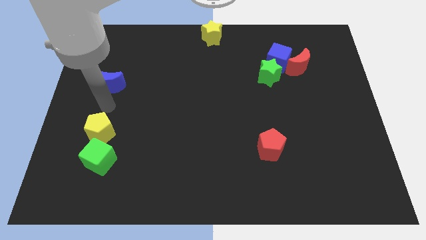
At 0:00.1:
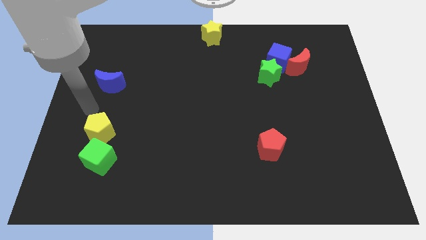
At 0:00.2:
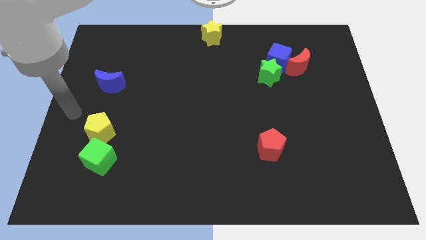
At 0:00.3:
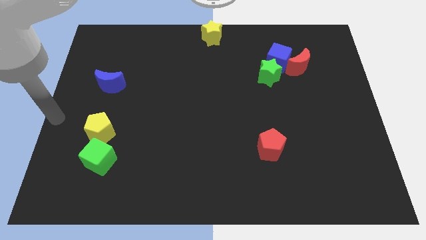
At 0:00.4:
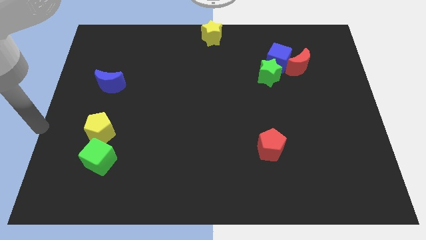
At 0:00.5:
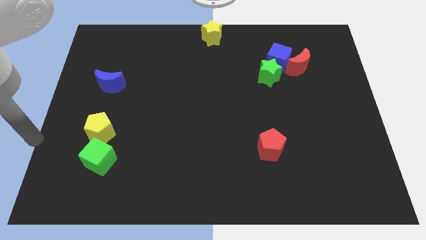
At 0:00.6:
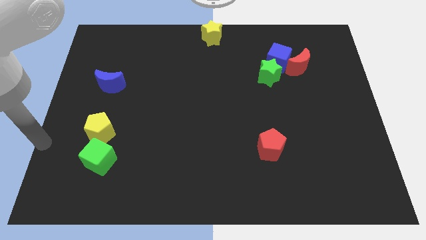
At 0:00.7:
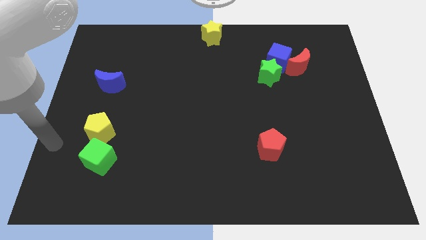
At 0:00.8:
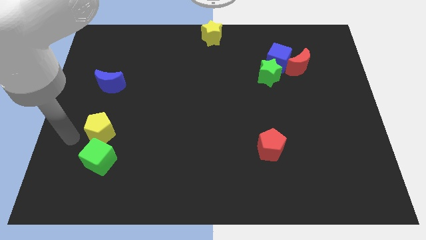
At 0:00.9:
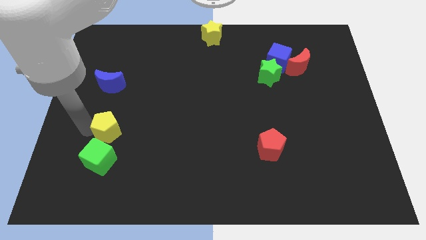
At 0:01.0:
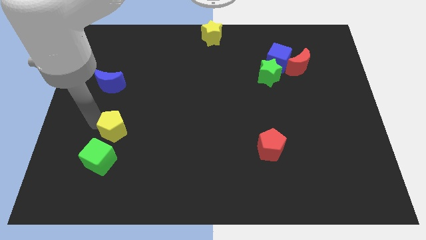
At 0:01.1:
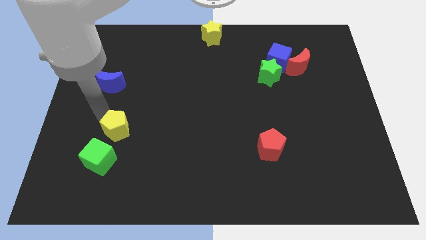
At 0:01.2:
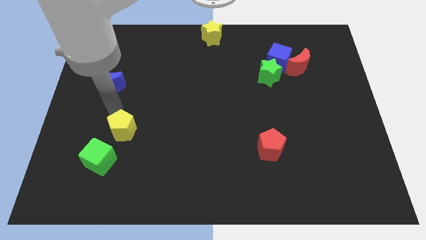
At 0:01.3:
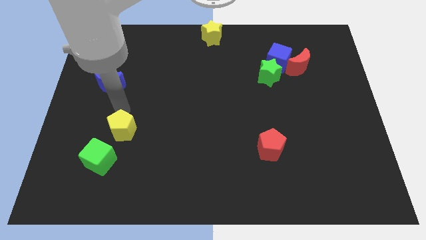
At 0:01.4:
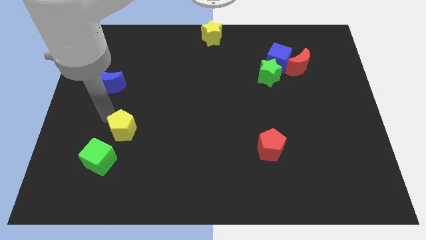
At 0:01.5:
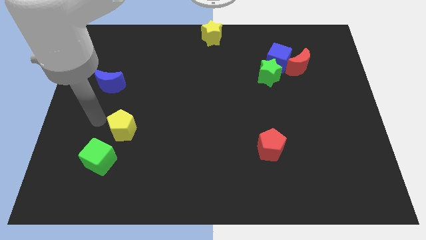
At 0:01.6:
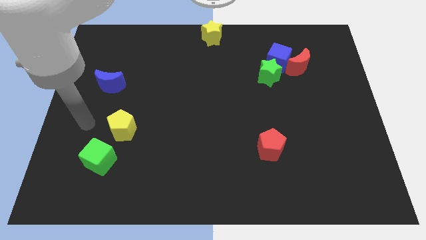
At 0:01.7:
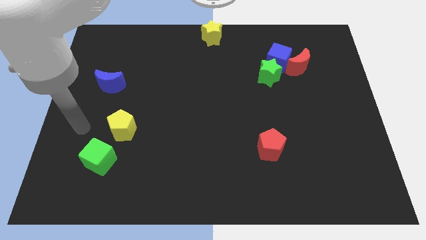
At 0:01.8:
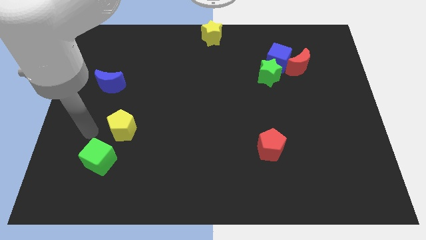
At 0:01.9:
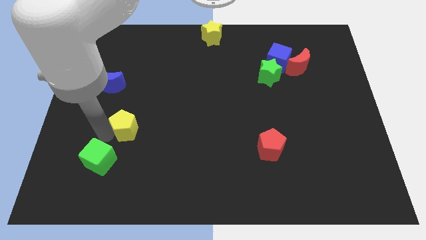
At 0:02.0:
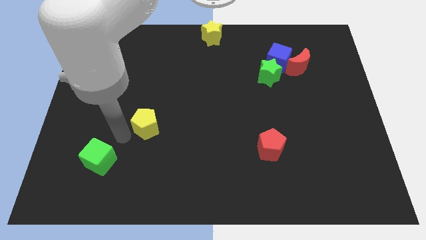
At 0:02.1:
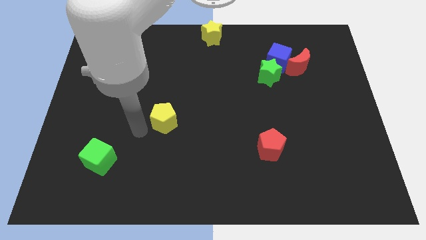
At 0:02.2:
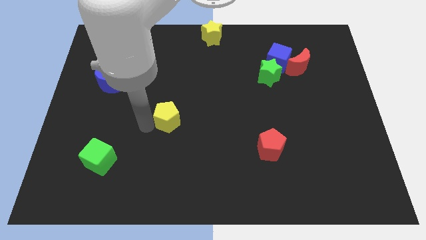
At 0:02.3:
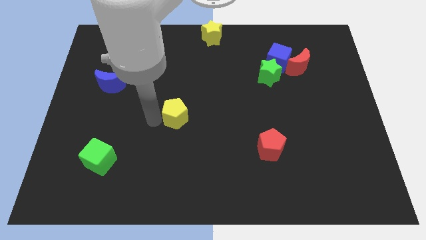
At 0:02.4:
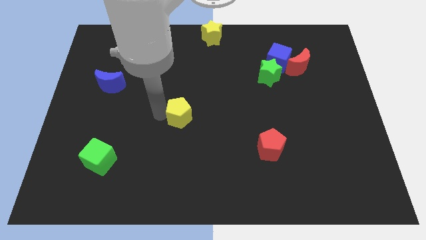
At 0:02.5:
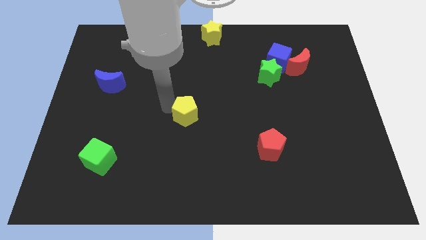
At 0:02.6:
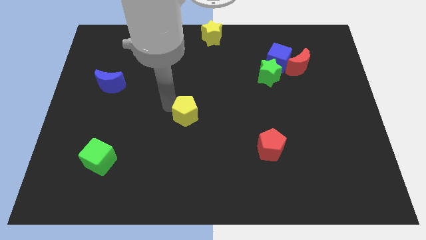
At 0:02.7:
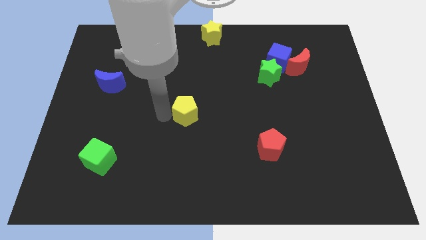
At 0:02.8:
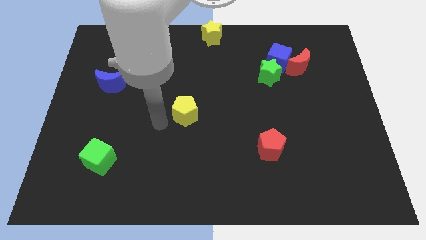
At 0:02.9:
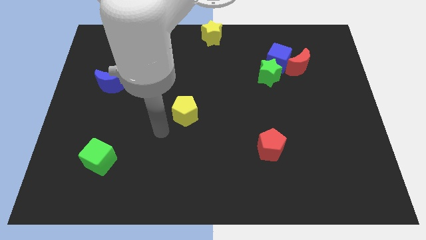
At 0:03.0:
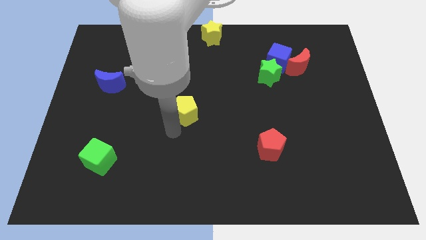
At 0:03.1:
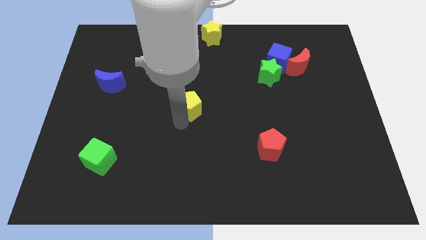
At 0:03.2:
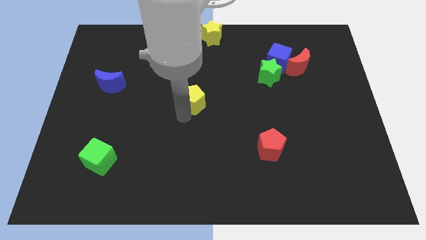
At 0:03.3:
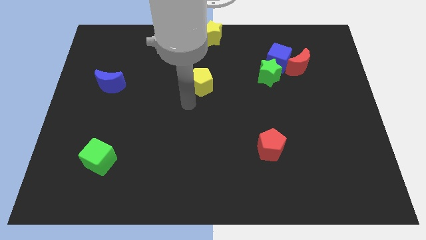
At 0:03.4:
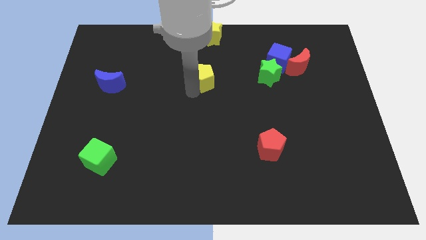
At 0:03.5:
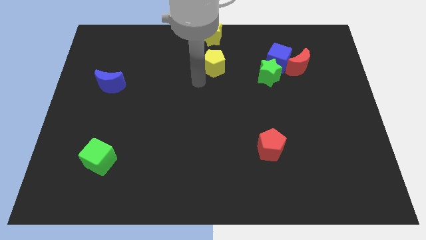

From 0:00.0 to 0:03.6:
move yellow pentagon vertically below yellow star

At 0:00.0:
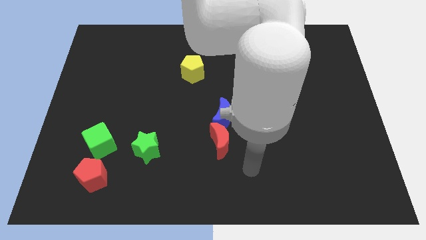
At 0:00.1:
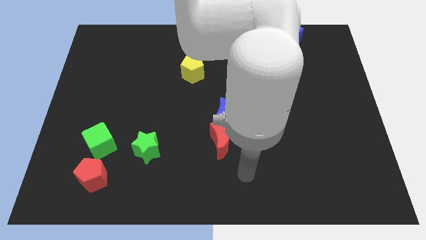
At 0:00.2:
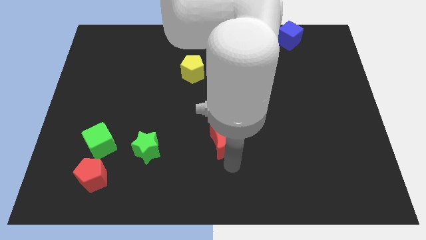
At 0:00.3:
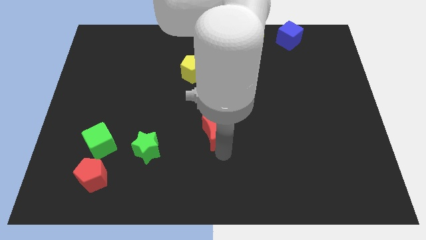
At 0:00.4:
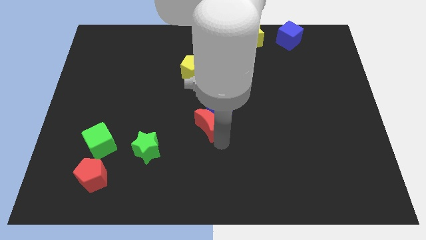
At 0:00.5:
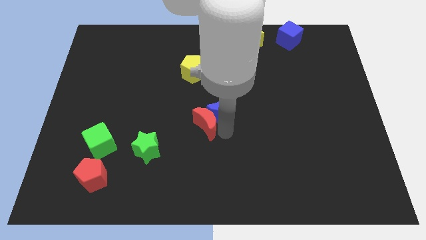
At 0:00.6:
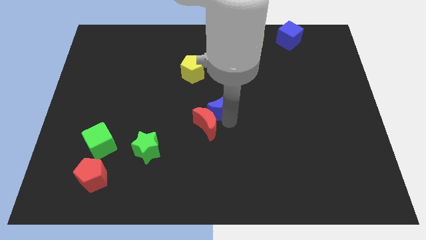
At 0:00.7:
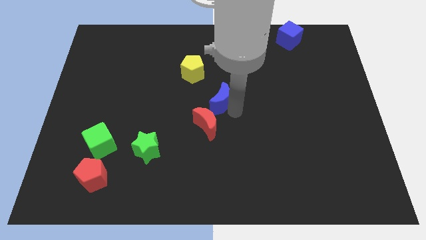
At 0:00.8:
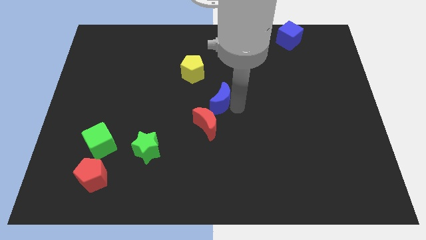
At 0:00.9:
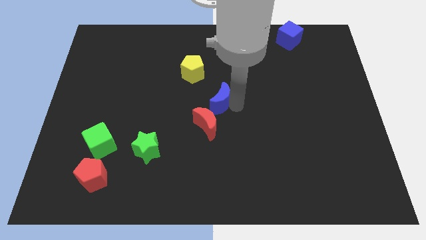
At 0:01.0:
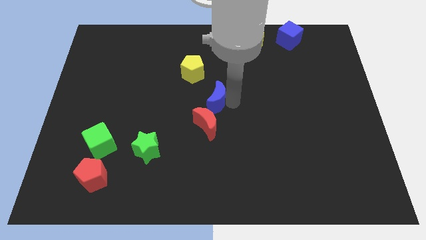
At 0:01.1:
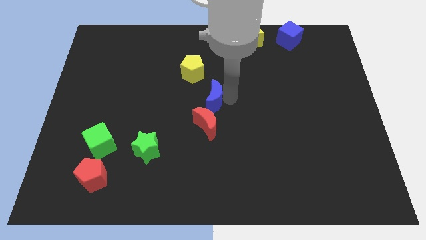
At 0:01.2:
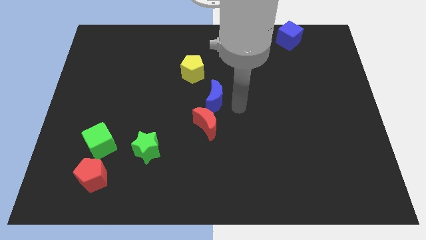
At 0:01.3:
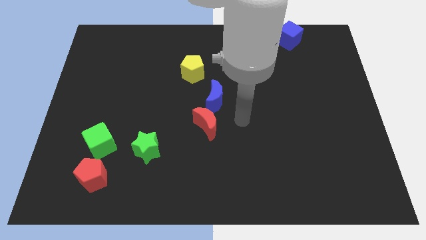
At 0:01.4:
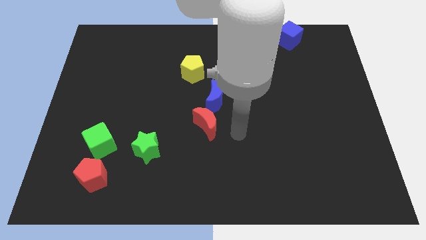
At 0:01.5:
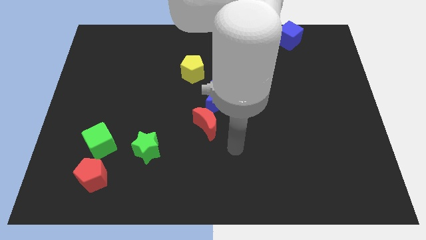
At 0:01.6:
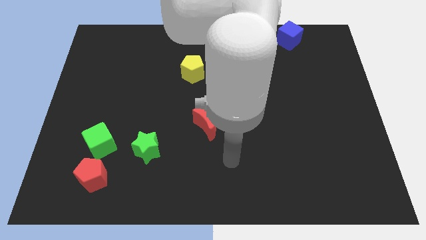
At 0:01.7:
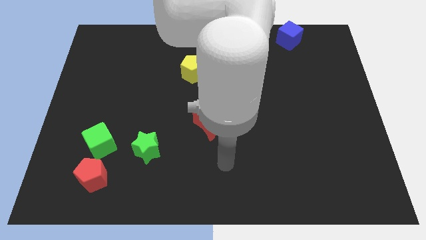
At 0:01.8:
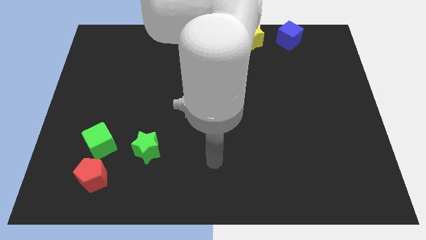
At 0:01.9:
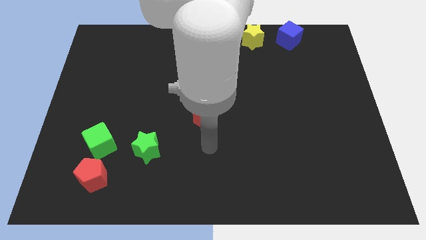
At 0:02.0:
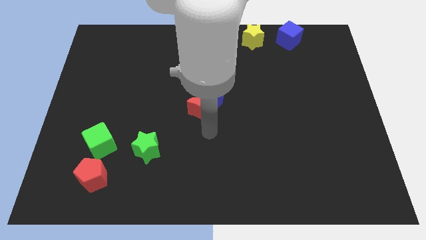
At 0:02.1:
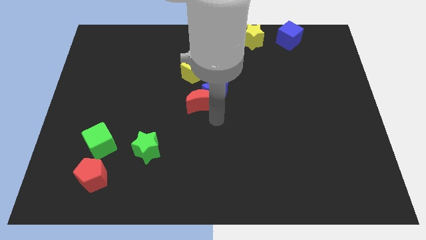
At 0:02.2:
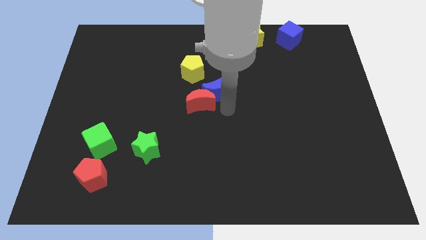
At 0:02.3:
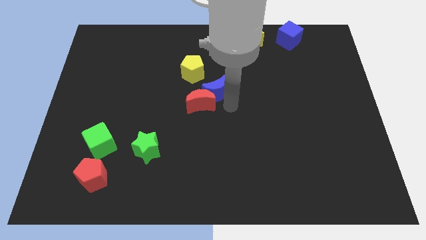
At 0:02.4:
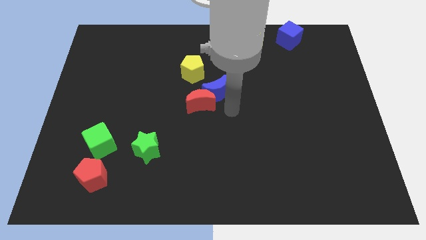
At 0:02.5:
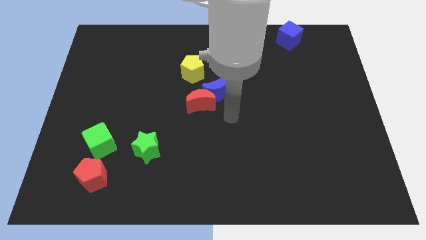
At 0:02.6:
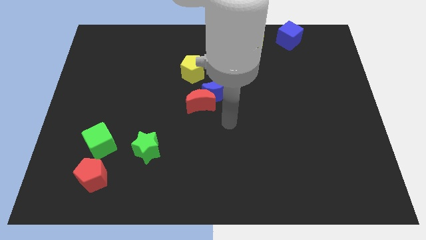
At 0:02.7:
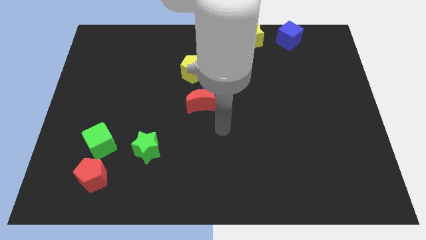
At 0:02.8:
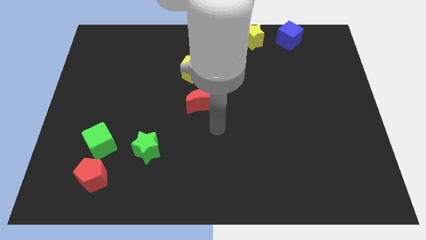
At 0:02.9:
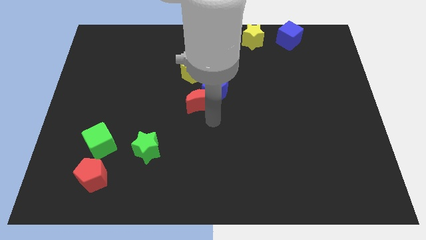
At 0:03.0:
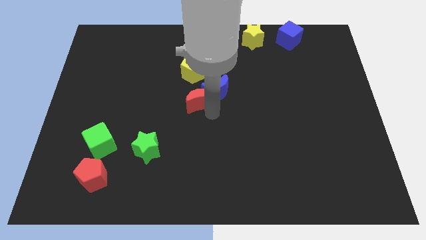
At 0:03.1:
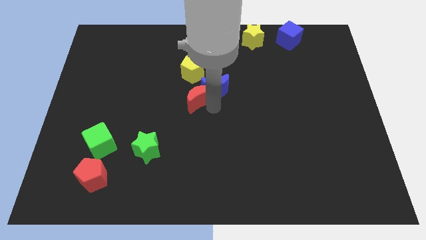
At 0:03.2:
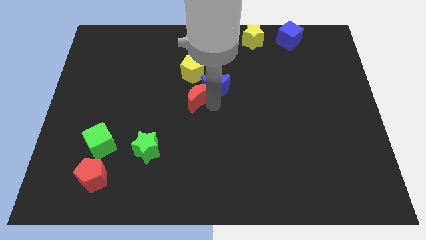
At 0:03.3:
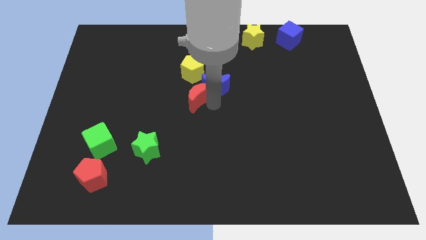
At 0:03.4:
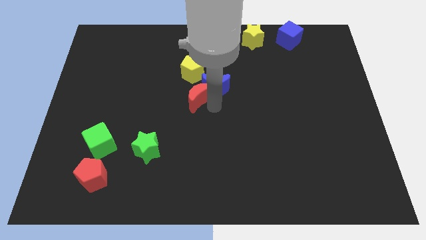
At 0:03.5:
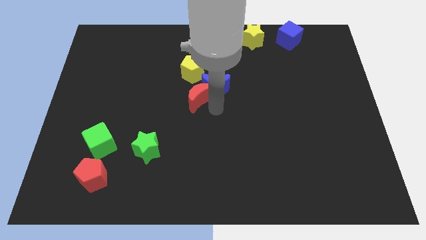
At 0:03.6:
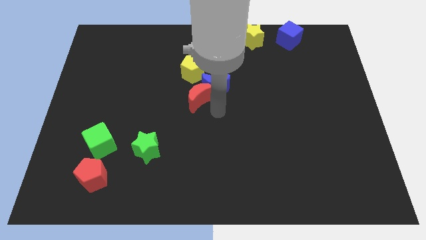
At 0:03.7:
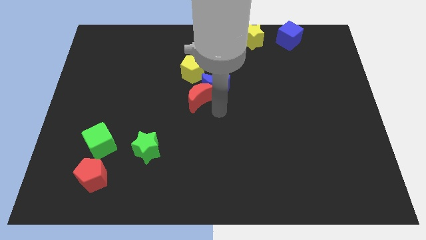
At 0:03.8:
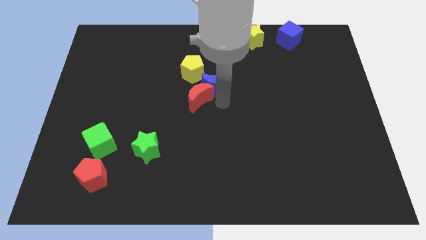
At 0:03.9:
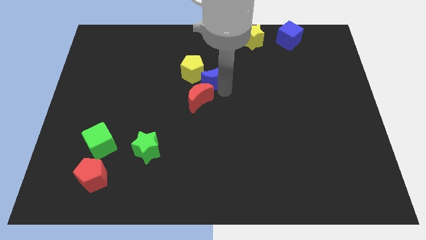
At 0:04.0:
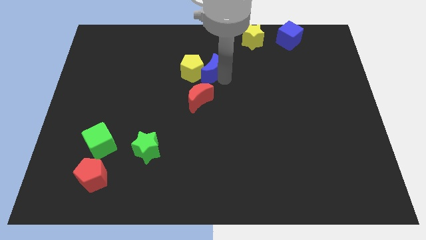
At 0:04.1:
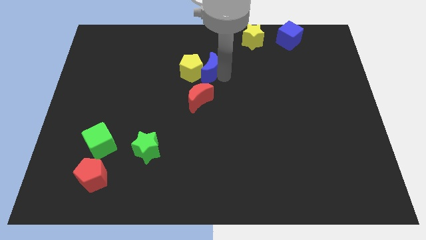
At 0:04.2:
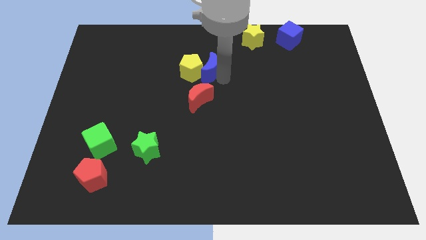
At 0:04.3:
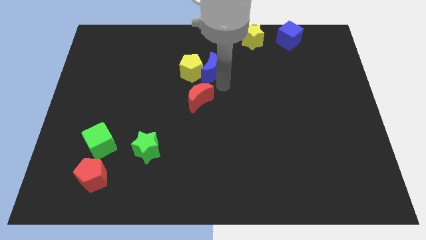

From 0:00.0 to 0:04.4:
place the blue crescent right to the yellow pentagon

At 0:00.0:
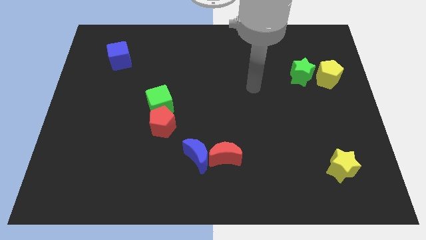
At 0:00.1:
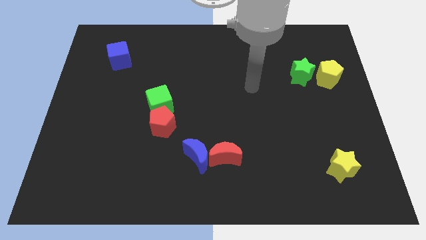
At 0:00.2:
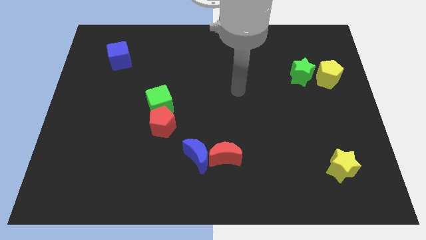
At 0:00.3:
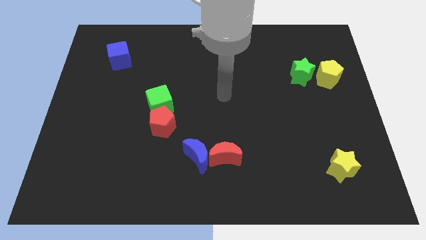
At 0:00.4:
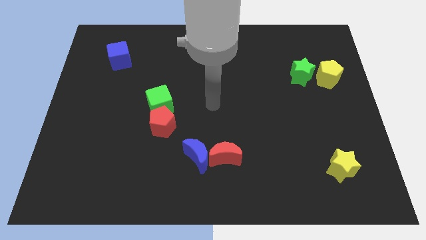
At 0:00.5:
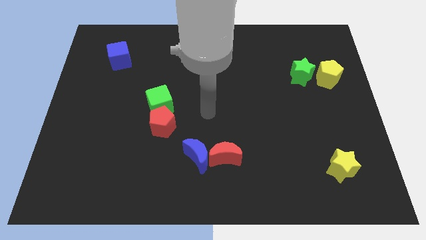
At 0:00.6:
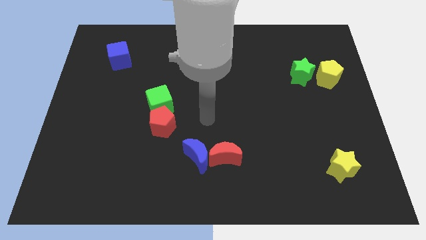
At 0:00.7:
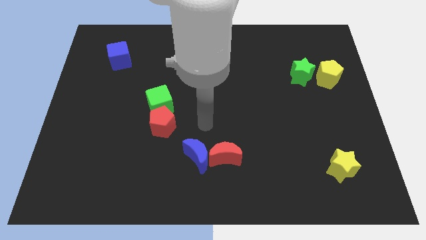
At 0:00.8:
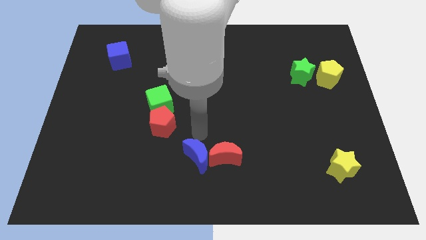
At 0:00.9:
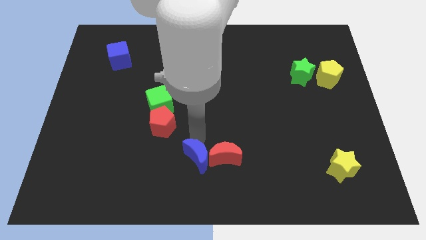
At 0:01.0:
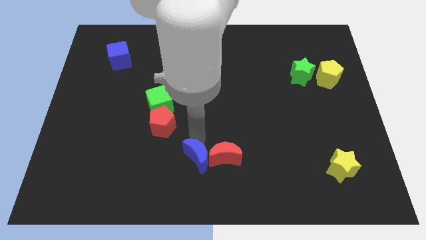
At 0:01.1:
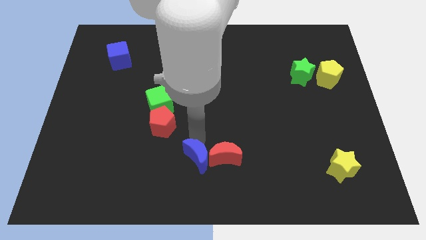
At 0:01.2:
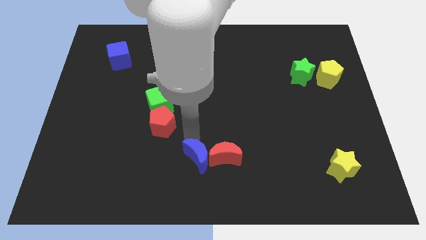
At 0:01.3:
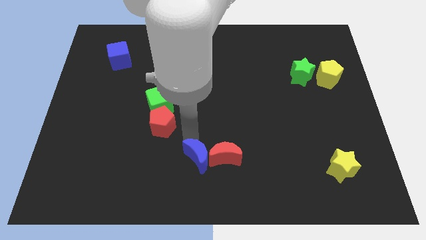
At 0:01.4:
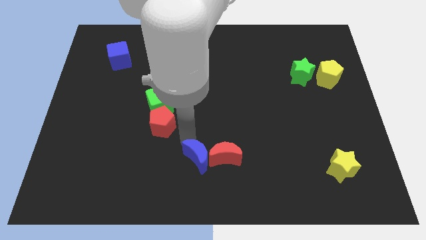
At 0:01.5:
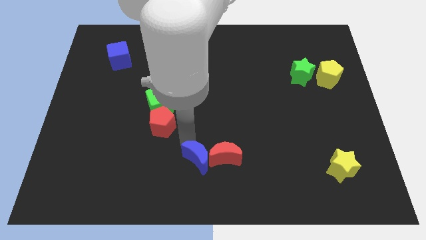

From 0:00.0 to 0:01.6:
touch the top side of the blue crescent
